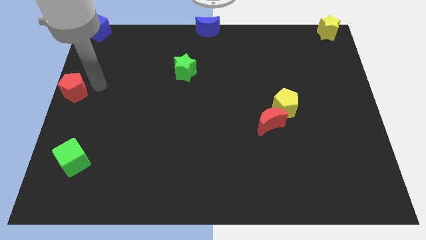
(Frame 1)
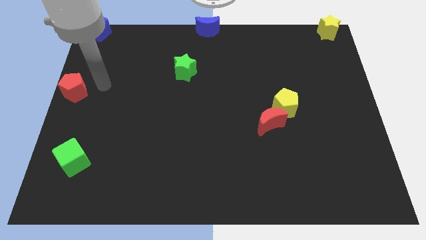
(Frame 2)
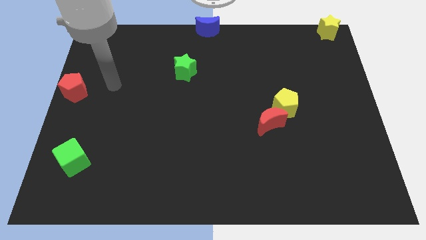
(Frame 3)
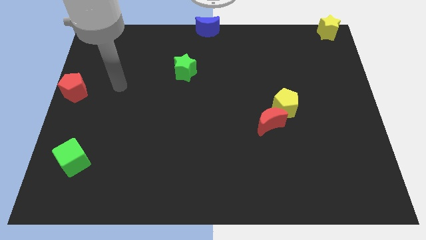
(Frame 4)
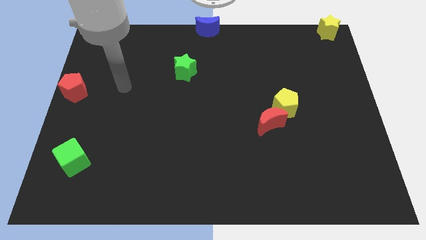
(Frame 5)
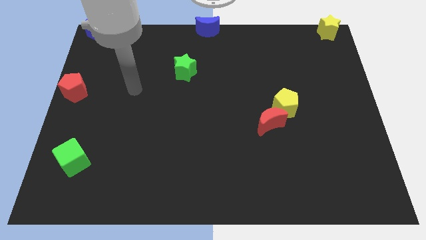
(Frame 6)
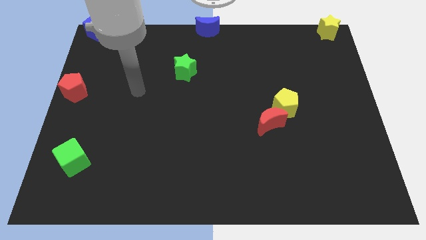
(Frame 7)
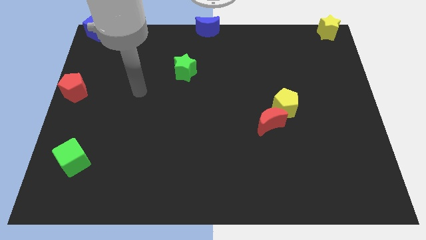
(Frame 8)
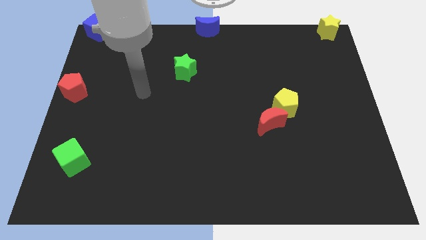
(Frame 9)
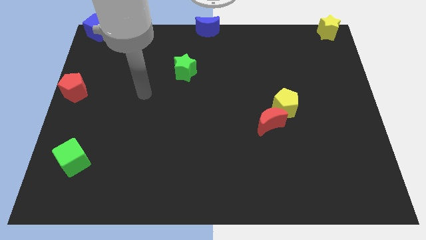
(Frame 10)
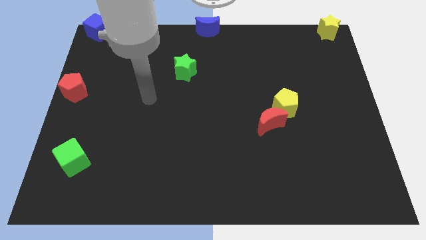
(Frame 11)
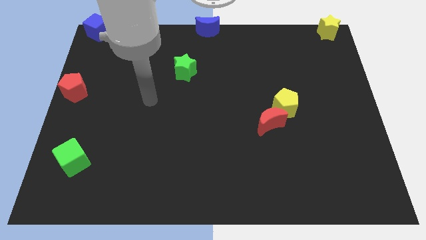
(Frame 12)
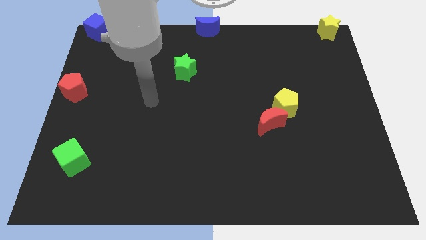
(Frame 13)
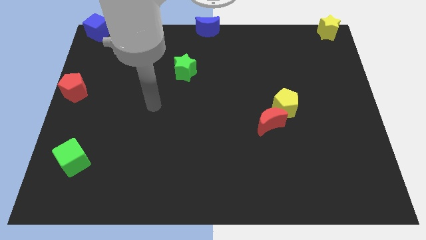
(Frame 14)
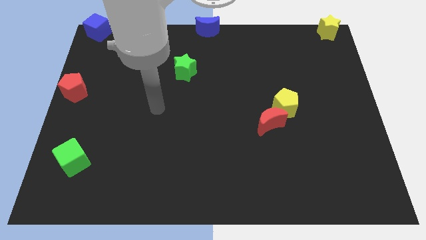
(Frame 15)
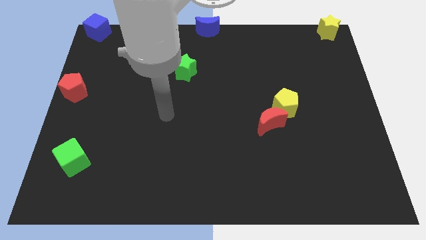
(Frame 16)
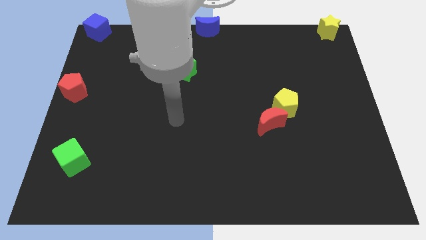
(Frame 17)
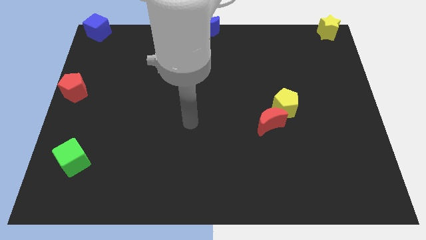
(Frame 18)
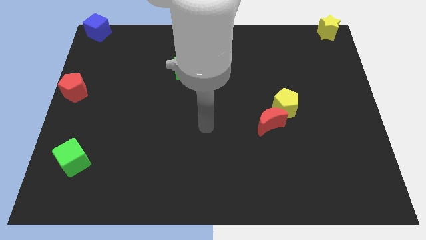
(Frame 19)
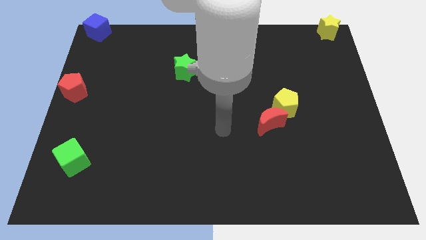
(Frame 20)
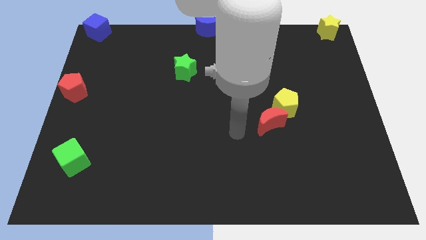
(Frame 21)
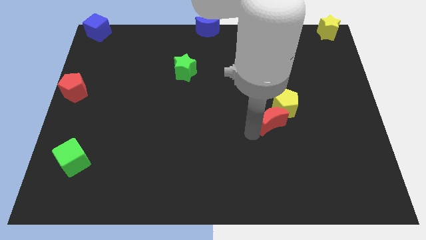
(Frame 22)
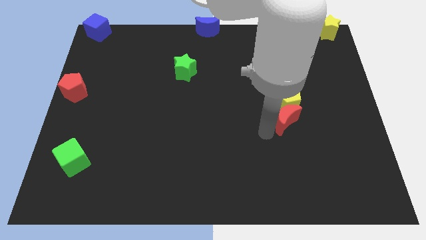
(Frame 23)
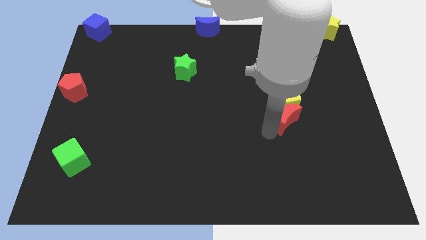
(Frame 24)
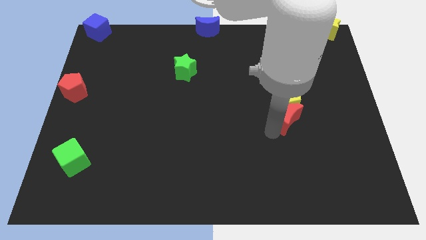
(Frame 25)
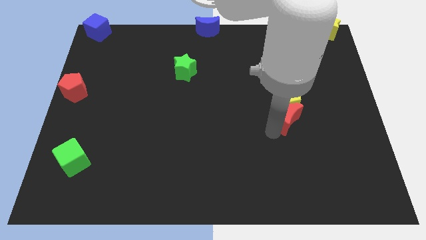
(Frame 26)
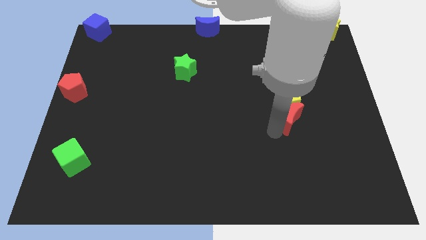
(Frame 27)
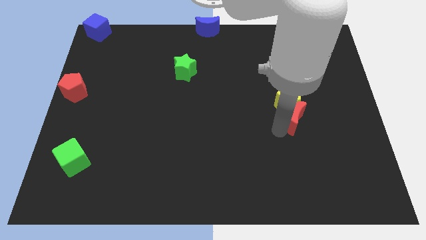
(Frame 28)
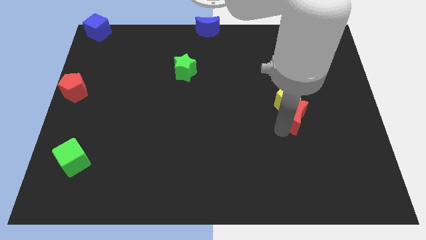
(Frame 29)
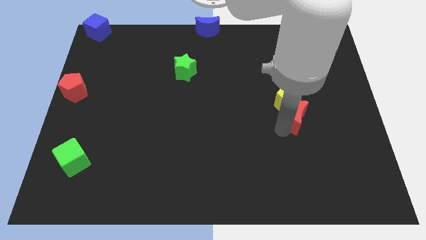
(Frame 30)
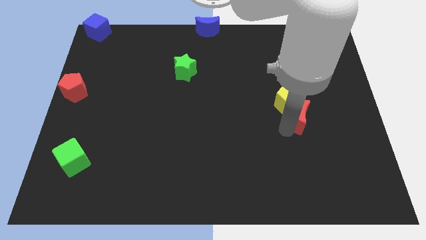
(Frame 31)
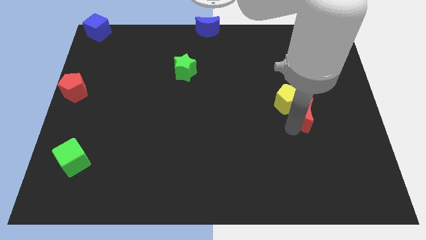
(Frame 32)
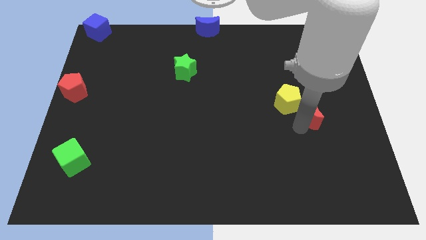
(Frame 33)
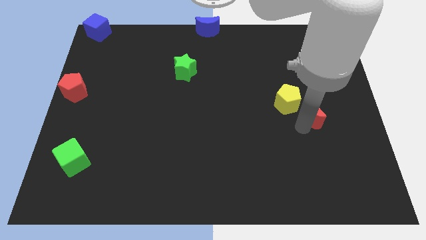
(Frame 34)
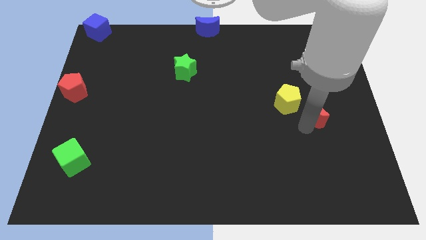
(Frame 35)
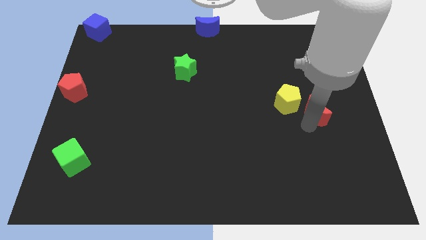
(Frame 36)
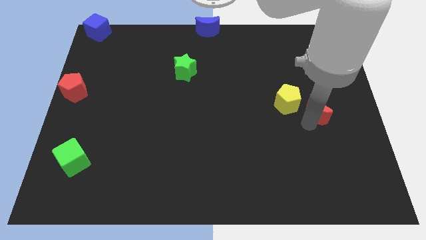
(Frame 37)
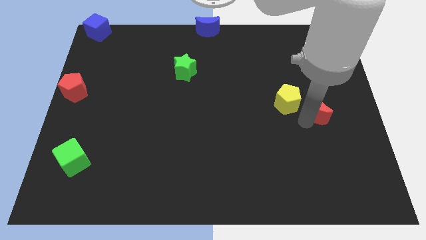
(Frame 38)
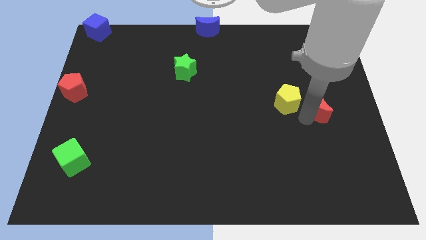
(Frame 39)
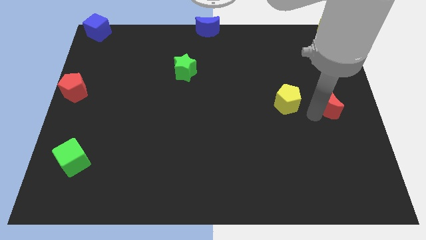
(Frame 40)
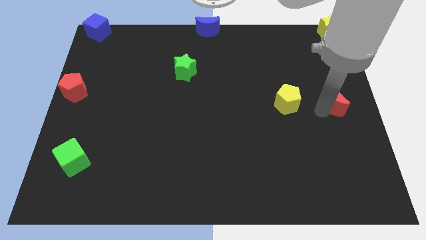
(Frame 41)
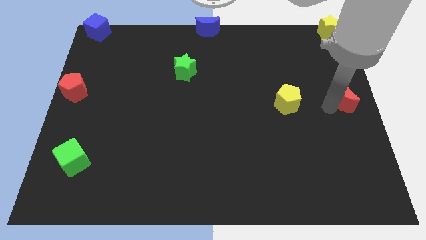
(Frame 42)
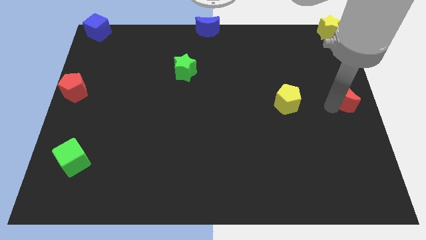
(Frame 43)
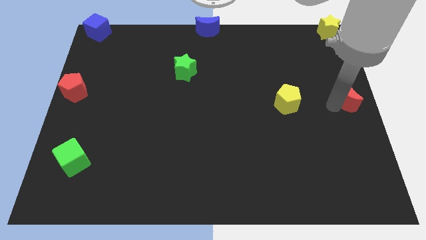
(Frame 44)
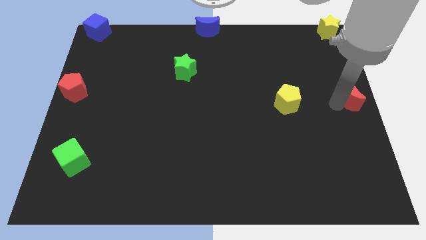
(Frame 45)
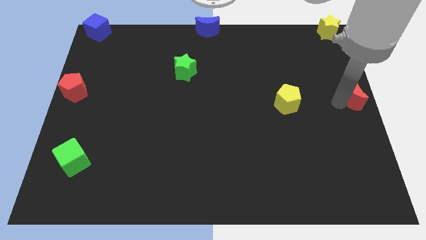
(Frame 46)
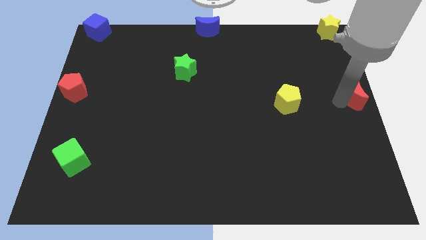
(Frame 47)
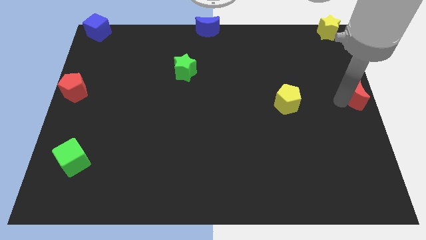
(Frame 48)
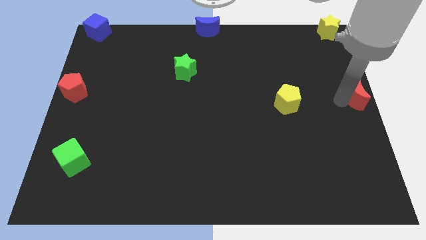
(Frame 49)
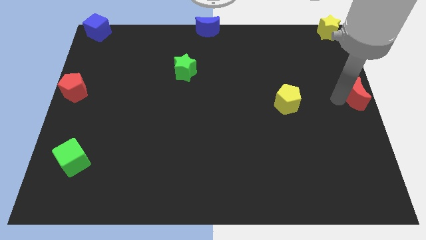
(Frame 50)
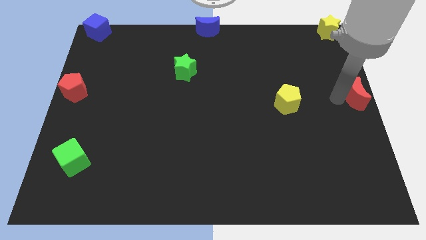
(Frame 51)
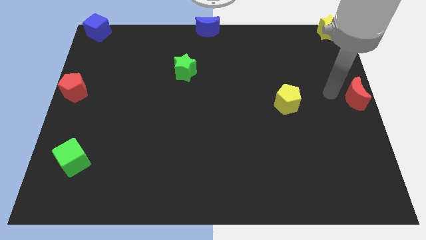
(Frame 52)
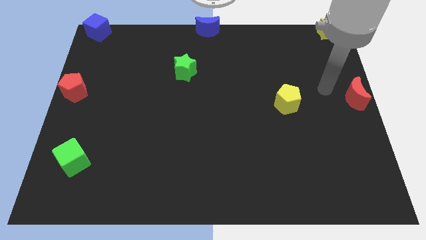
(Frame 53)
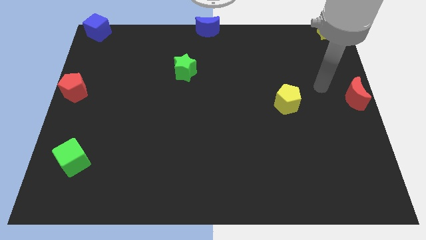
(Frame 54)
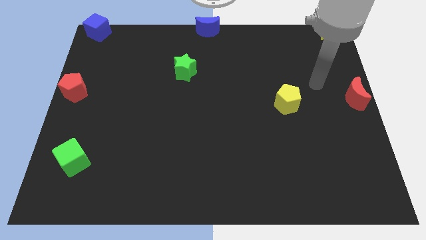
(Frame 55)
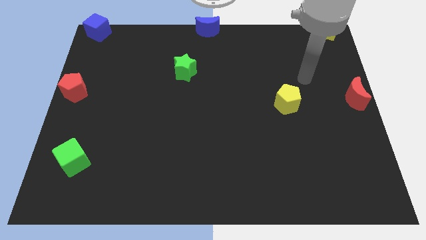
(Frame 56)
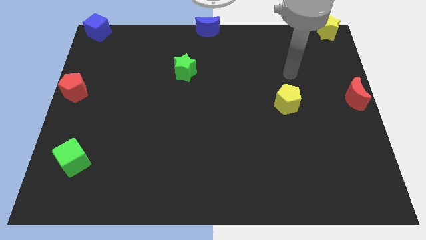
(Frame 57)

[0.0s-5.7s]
move the red crescent to the right center of the board

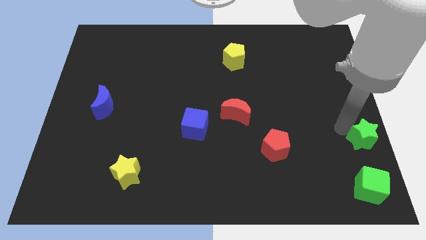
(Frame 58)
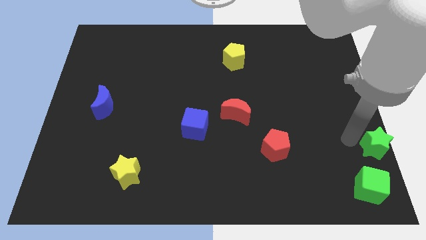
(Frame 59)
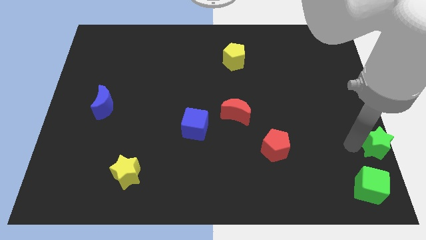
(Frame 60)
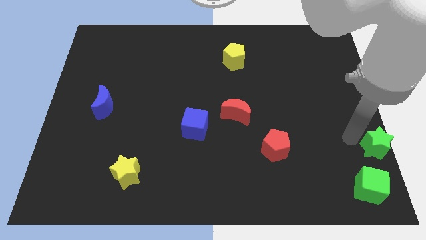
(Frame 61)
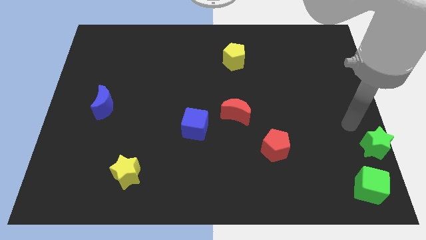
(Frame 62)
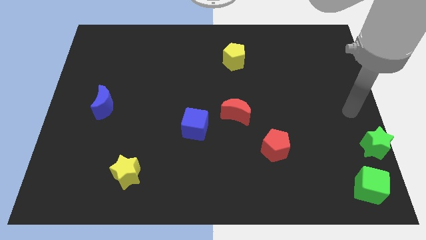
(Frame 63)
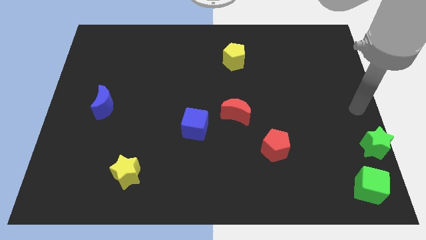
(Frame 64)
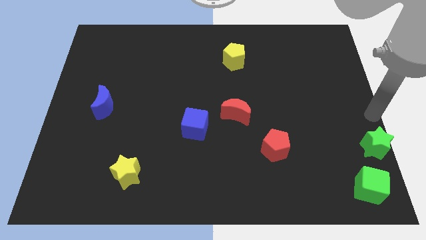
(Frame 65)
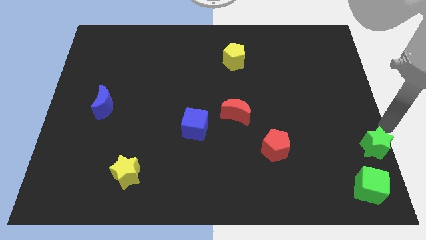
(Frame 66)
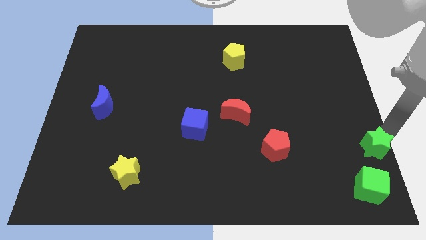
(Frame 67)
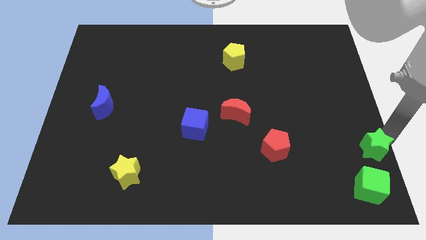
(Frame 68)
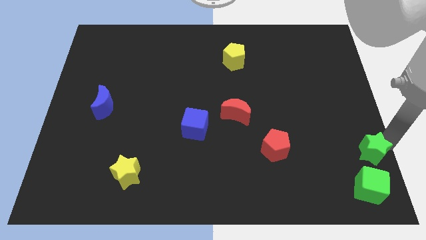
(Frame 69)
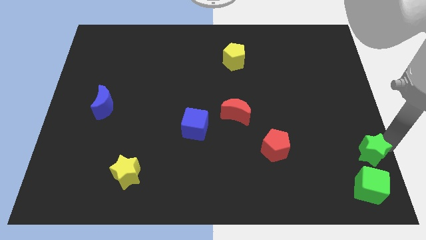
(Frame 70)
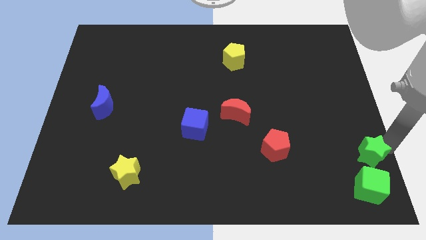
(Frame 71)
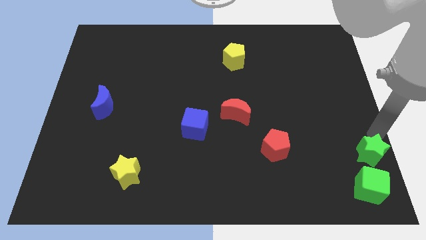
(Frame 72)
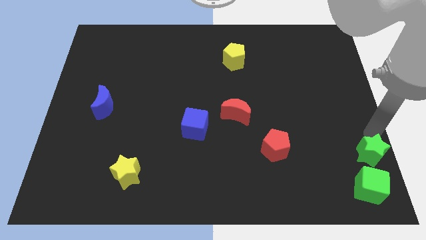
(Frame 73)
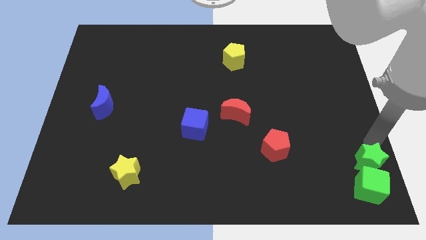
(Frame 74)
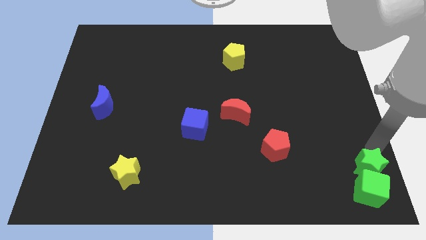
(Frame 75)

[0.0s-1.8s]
move green star into green cube

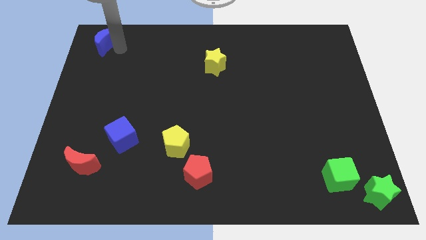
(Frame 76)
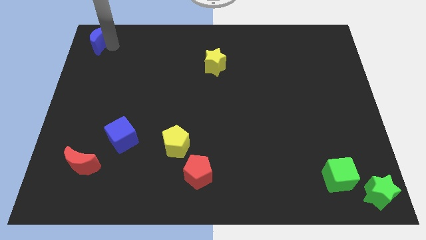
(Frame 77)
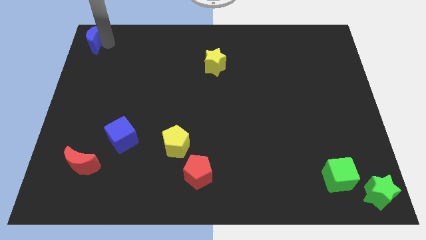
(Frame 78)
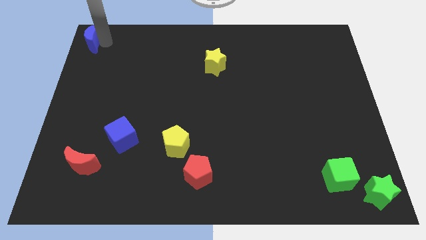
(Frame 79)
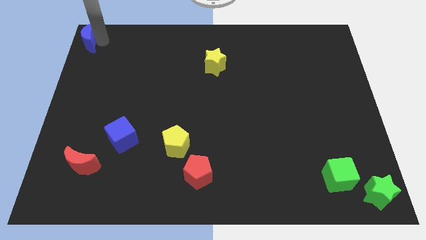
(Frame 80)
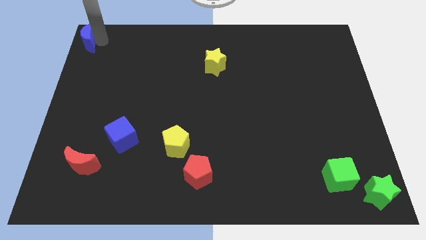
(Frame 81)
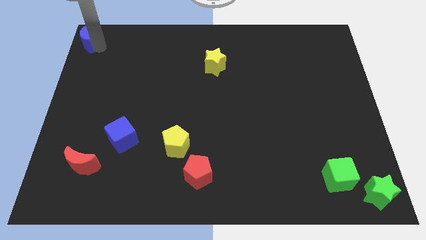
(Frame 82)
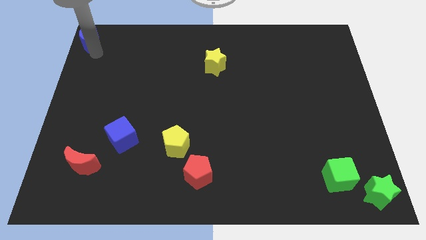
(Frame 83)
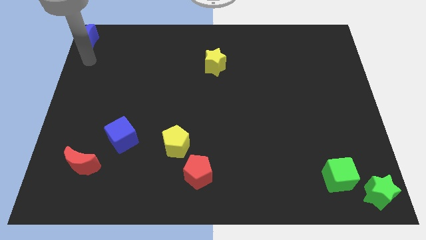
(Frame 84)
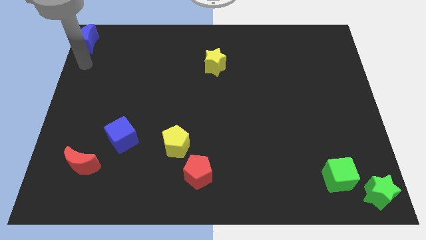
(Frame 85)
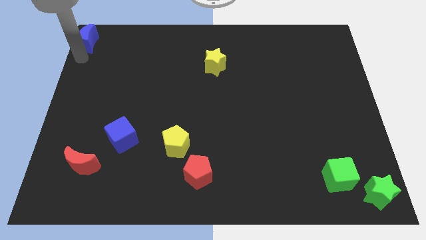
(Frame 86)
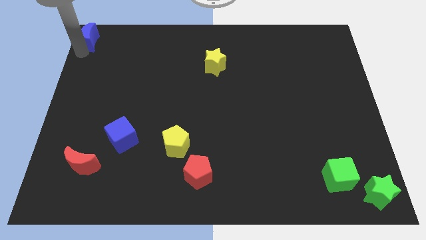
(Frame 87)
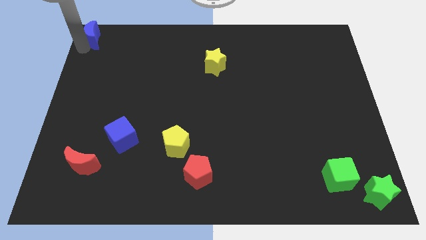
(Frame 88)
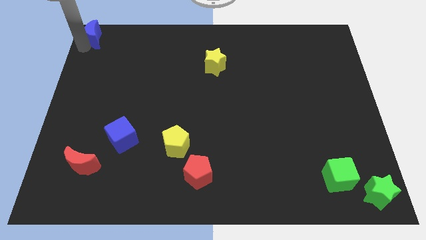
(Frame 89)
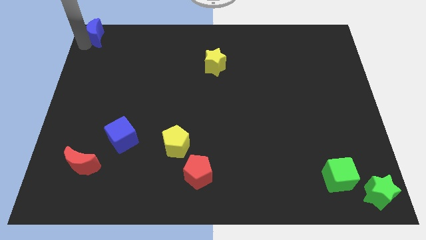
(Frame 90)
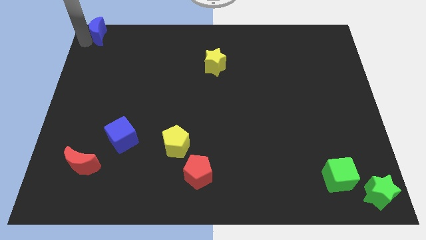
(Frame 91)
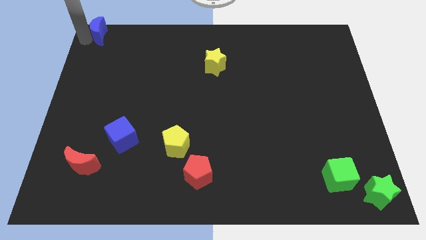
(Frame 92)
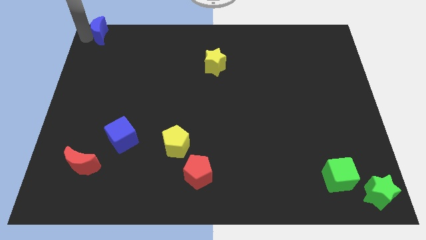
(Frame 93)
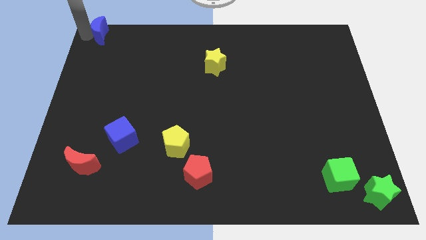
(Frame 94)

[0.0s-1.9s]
push the blue crescent towards the top left of the board
